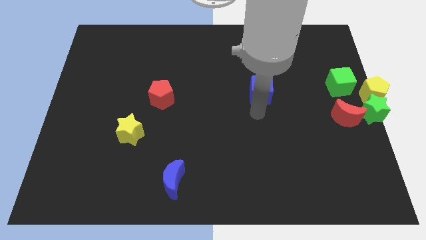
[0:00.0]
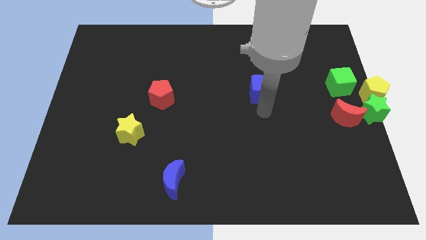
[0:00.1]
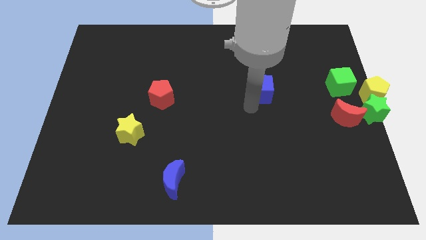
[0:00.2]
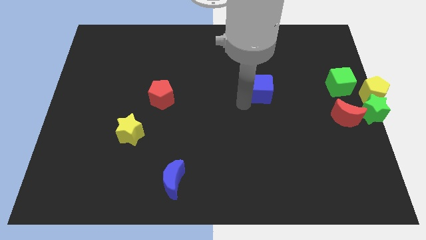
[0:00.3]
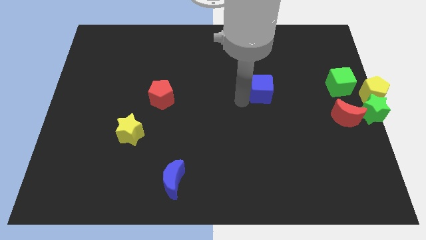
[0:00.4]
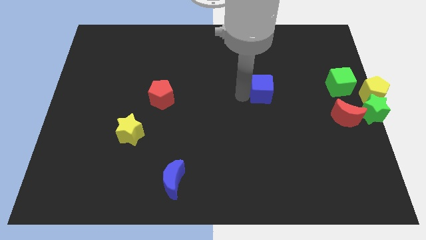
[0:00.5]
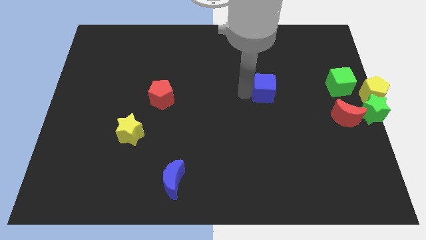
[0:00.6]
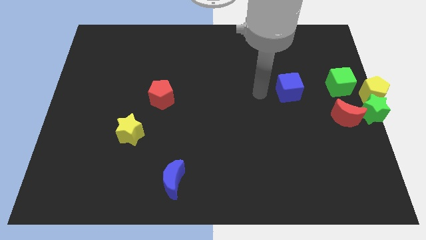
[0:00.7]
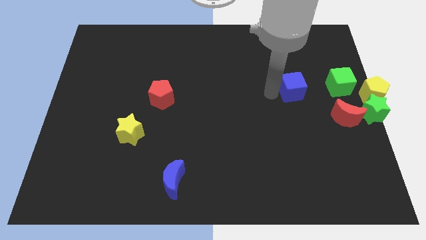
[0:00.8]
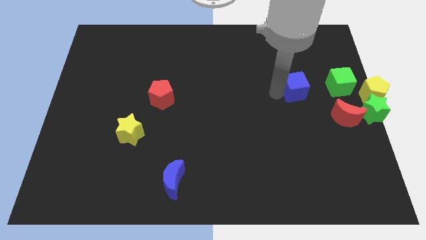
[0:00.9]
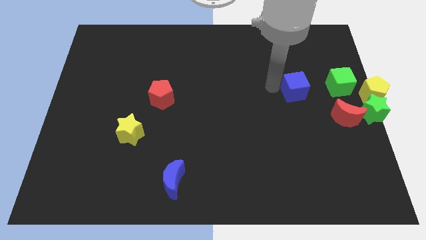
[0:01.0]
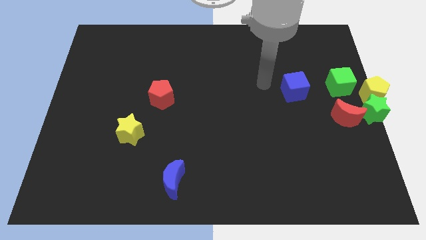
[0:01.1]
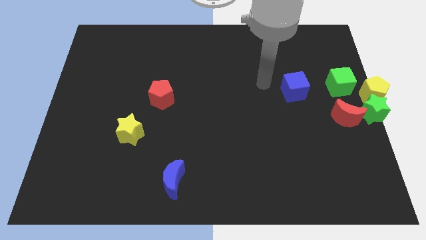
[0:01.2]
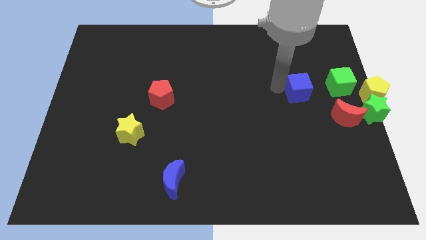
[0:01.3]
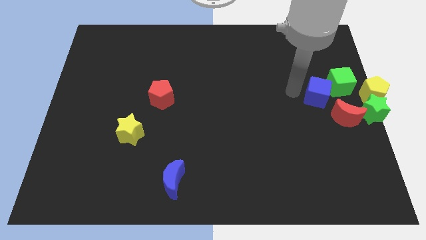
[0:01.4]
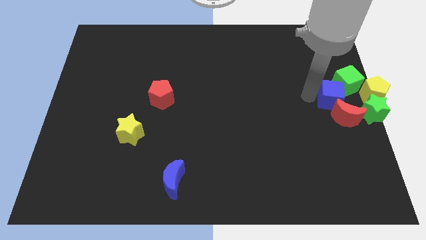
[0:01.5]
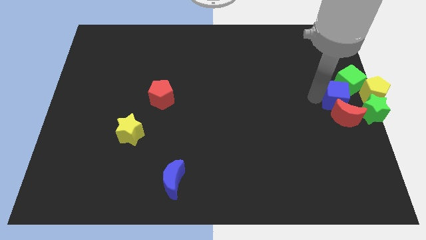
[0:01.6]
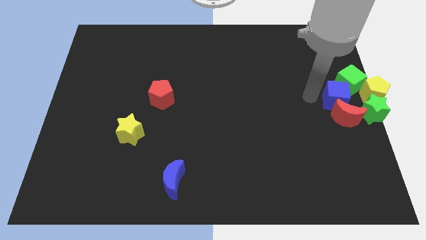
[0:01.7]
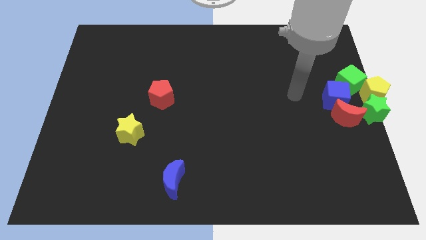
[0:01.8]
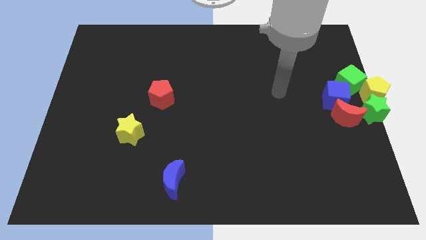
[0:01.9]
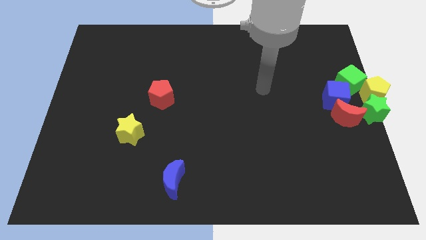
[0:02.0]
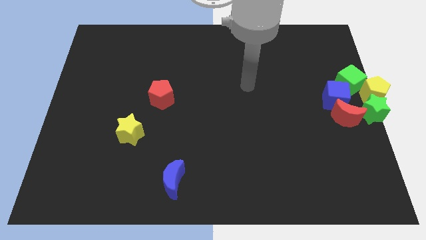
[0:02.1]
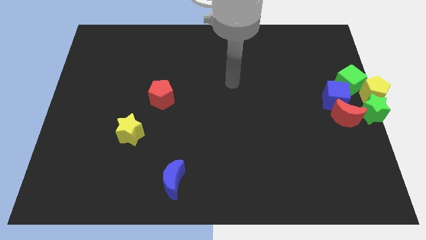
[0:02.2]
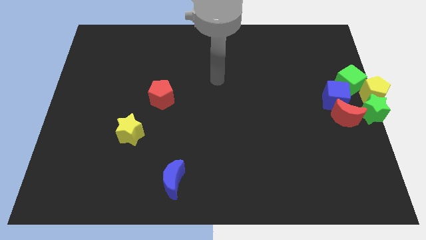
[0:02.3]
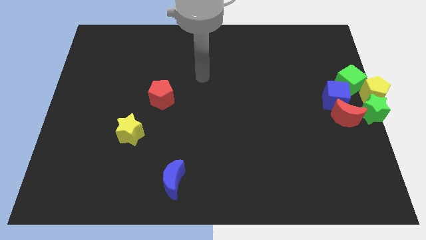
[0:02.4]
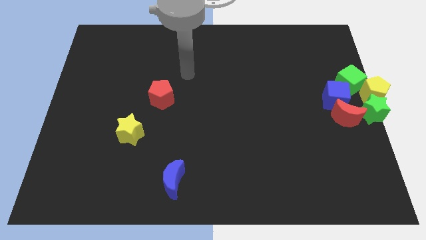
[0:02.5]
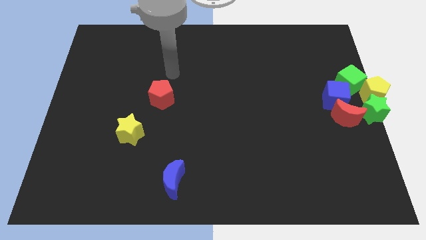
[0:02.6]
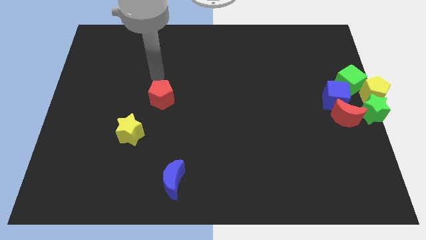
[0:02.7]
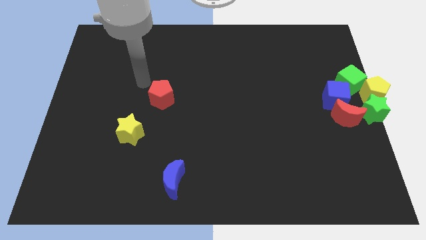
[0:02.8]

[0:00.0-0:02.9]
put the blue cube into the green cube

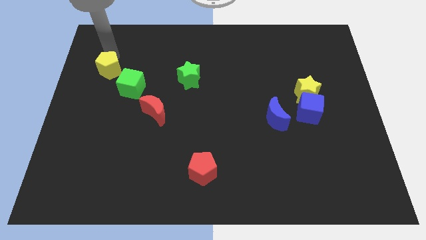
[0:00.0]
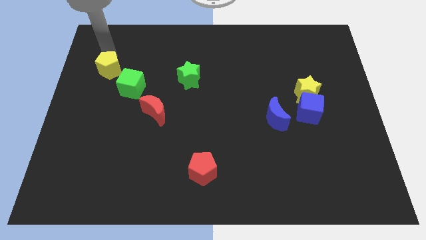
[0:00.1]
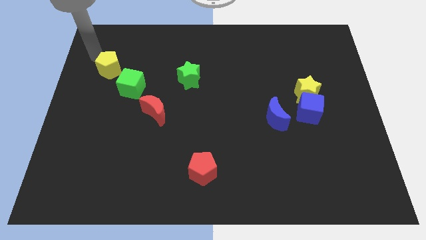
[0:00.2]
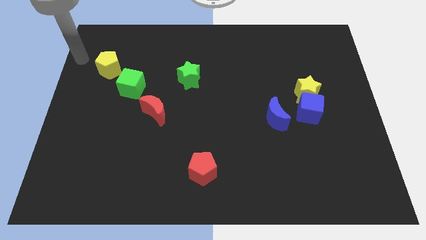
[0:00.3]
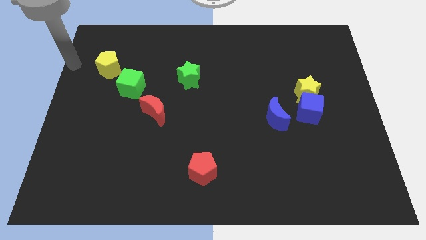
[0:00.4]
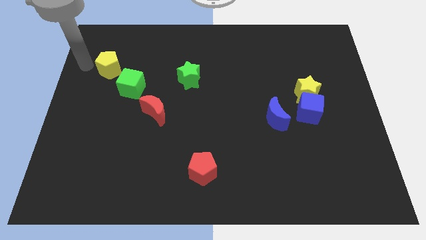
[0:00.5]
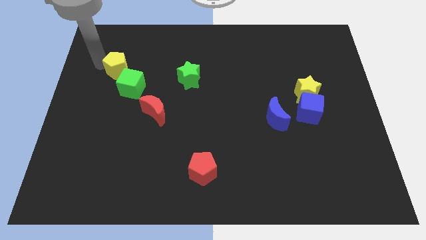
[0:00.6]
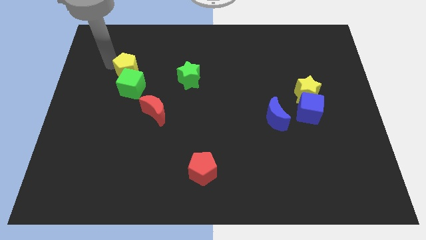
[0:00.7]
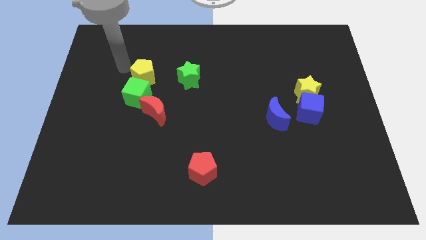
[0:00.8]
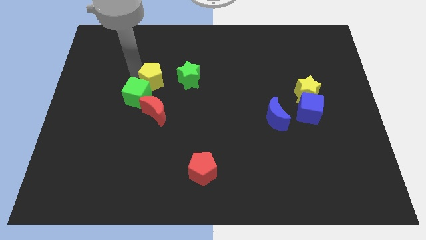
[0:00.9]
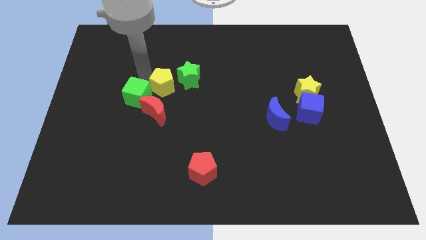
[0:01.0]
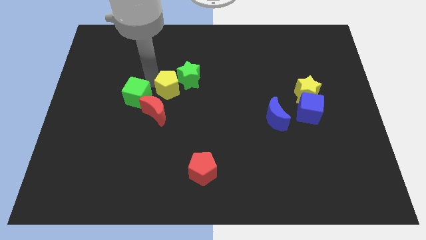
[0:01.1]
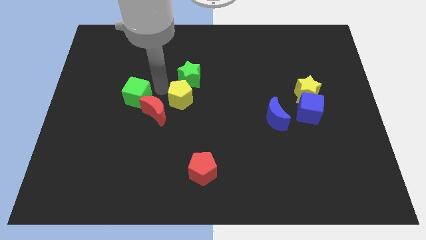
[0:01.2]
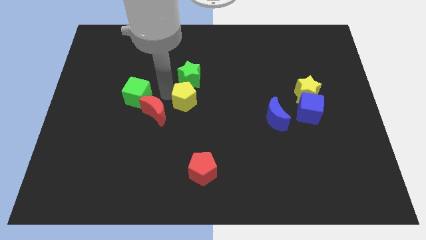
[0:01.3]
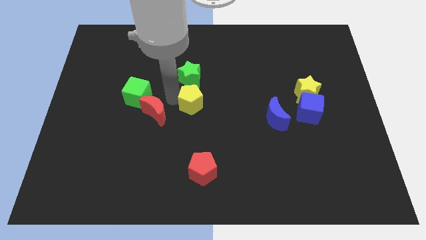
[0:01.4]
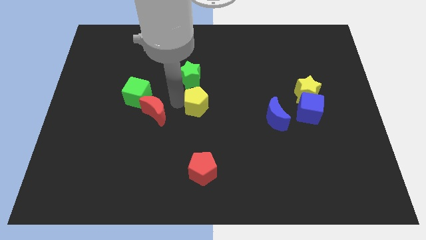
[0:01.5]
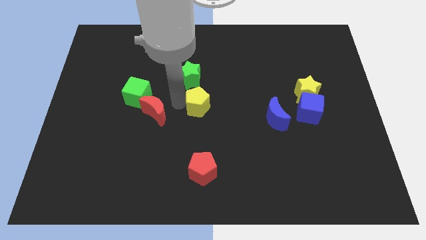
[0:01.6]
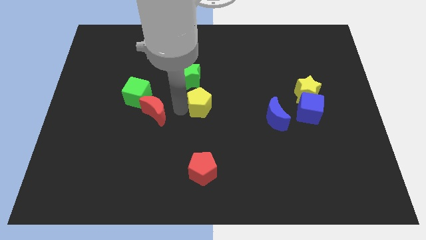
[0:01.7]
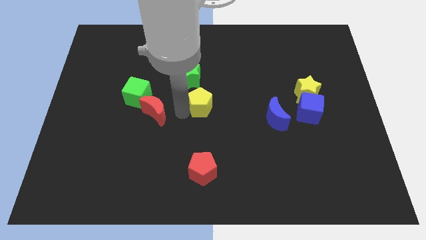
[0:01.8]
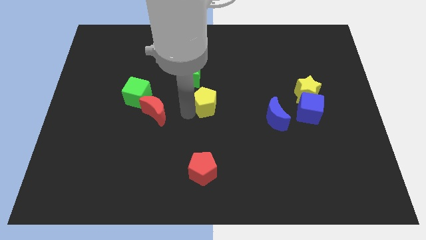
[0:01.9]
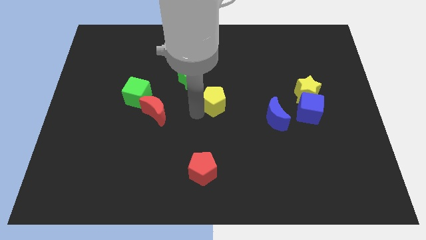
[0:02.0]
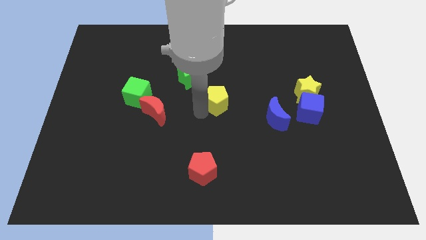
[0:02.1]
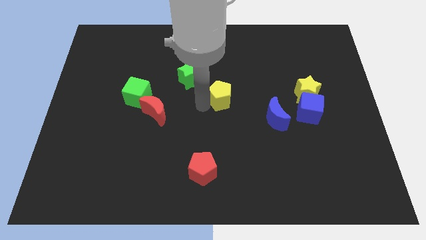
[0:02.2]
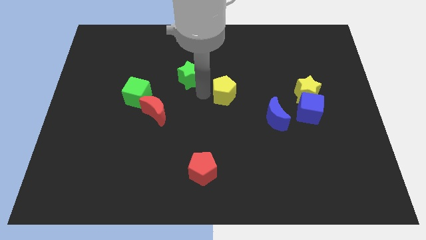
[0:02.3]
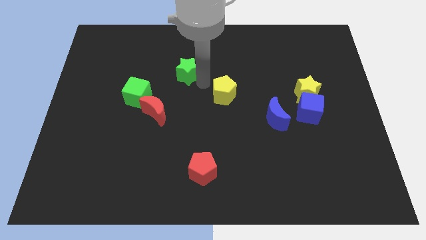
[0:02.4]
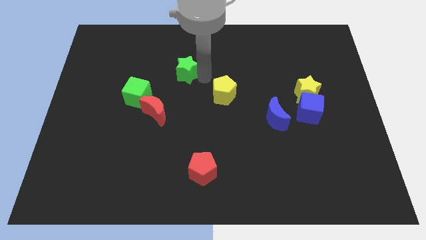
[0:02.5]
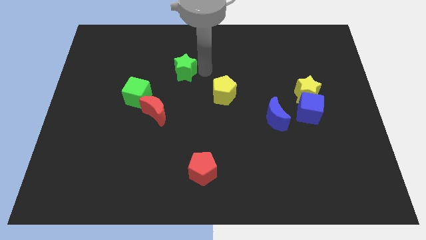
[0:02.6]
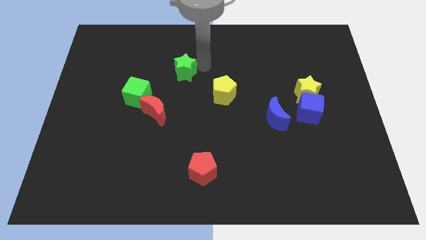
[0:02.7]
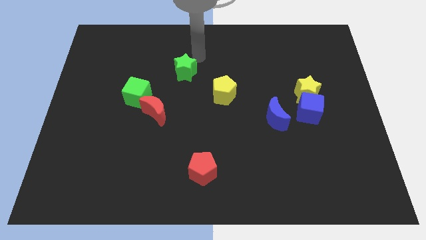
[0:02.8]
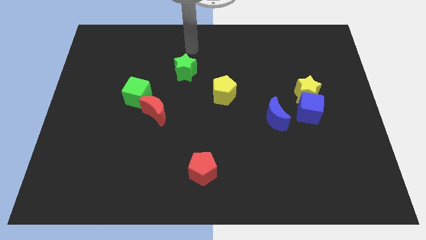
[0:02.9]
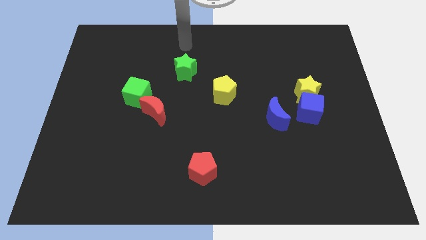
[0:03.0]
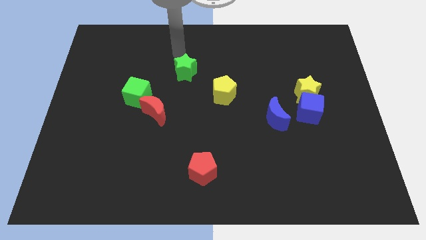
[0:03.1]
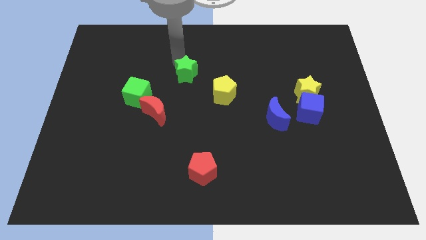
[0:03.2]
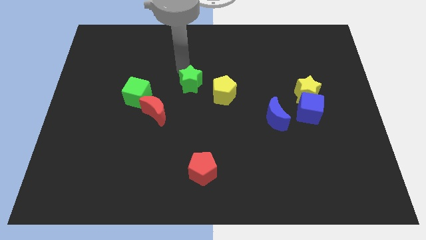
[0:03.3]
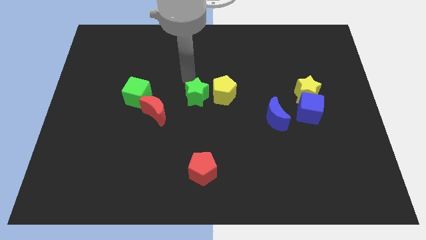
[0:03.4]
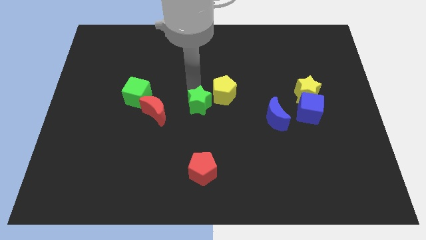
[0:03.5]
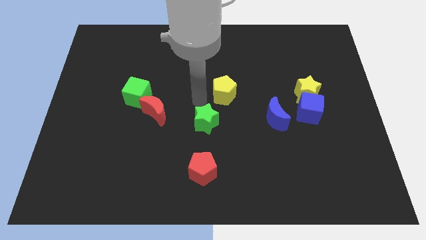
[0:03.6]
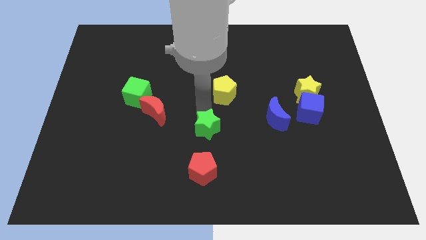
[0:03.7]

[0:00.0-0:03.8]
move the green star to the bottom side of the yellow pentagon

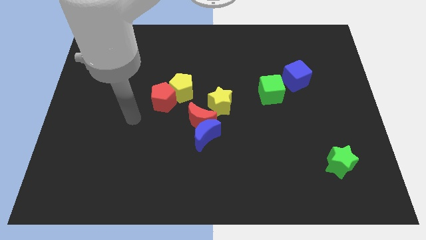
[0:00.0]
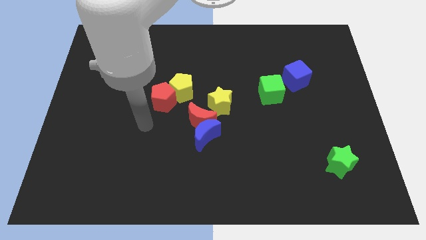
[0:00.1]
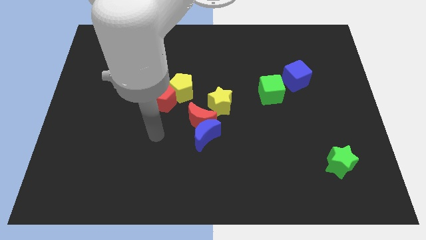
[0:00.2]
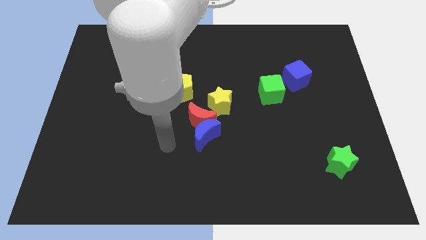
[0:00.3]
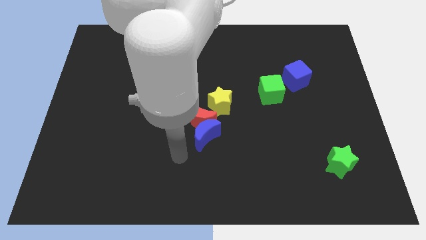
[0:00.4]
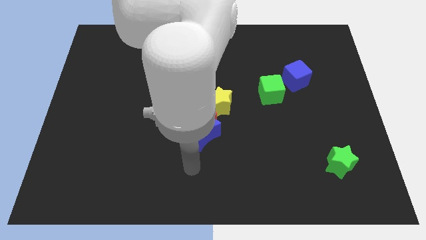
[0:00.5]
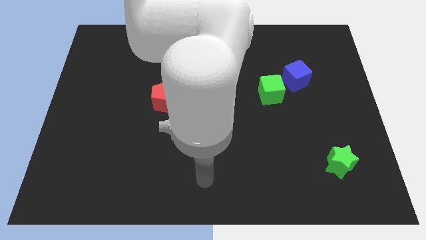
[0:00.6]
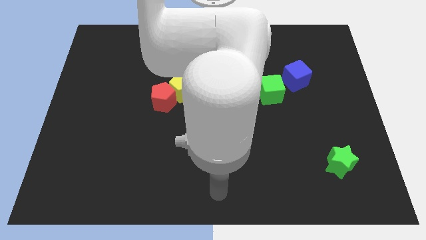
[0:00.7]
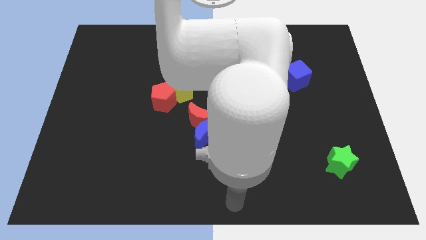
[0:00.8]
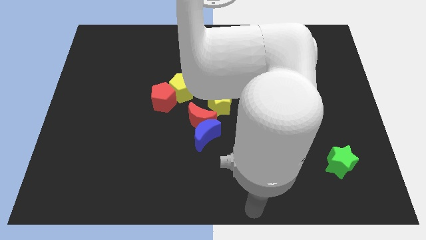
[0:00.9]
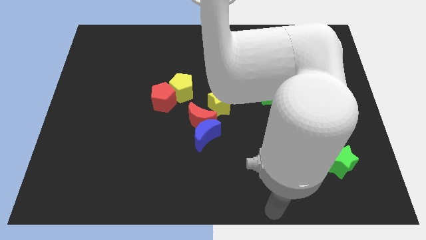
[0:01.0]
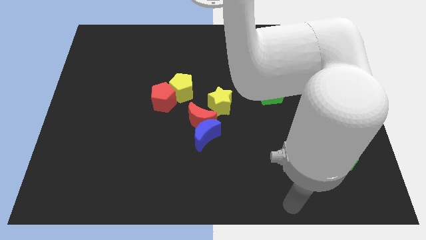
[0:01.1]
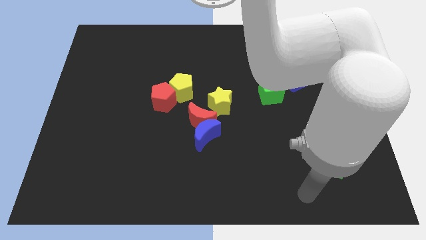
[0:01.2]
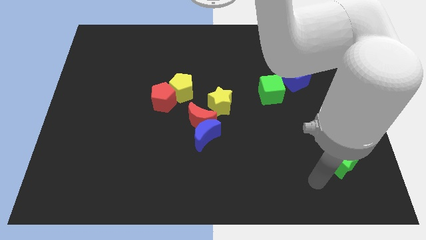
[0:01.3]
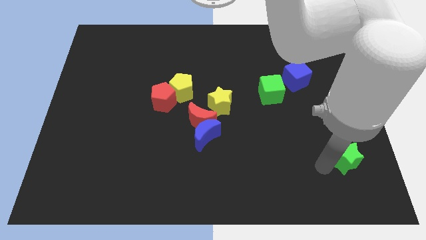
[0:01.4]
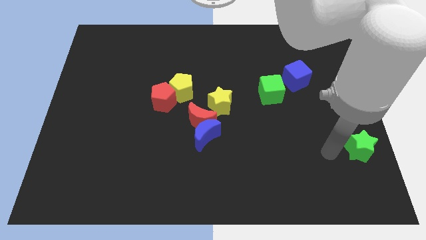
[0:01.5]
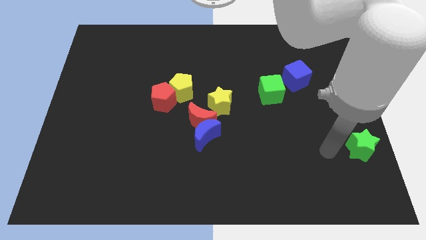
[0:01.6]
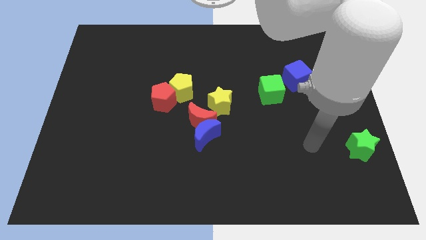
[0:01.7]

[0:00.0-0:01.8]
move the green star slightly up

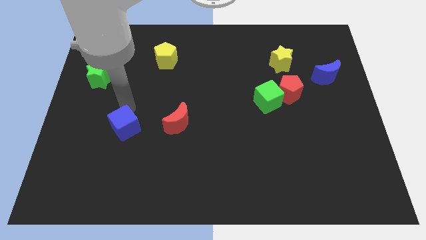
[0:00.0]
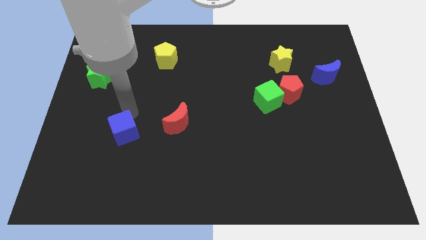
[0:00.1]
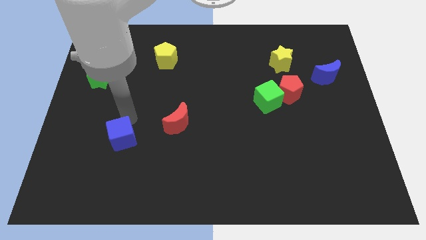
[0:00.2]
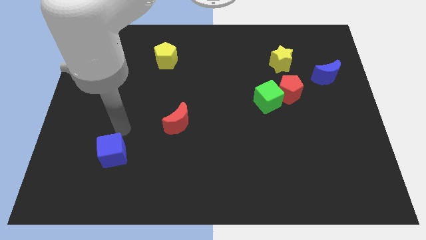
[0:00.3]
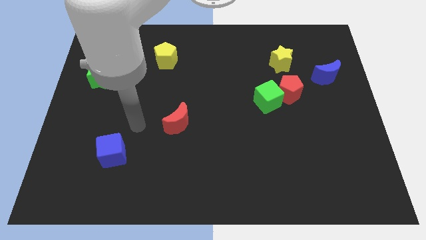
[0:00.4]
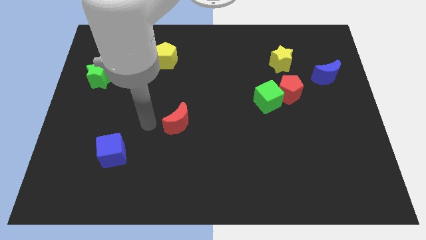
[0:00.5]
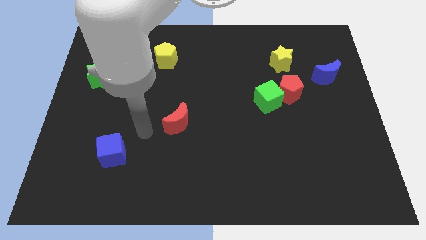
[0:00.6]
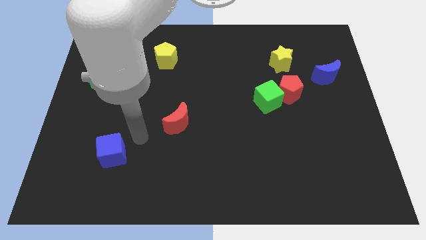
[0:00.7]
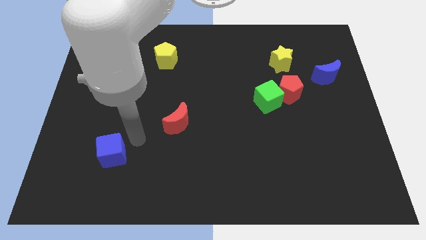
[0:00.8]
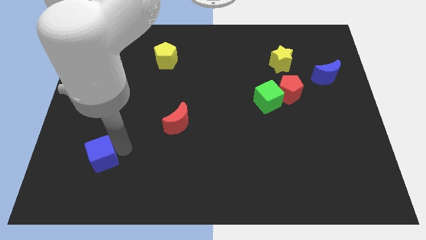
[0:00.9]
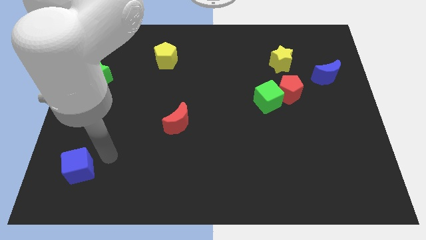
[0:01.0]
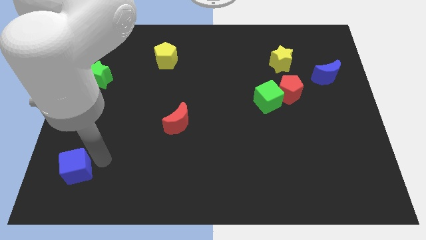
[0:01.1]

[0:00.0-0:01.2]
push blue cube downwards
